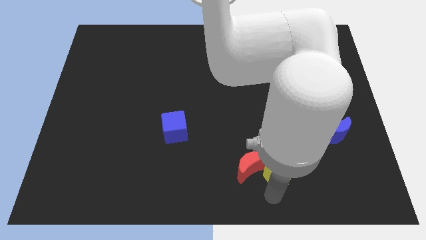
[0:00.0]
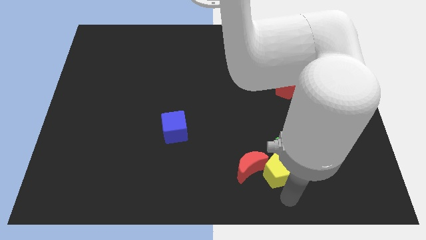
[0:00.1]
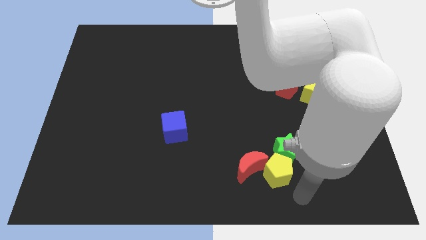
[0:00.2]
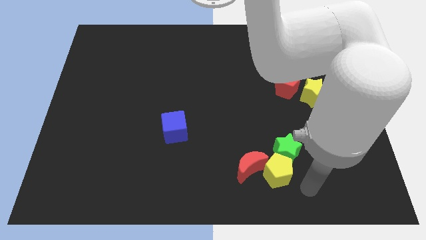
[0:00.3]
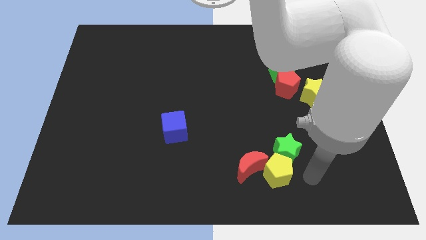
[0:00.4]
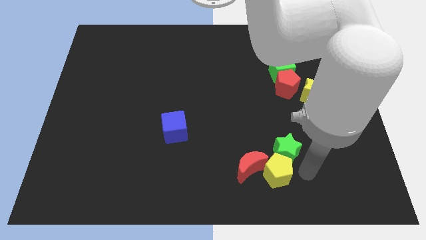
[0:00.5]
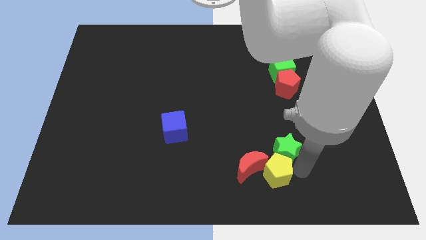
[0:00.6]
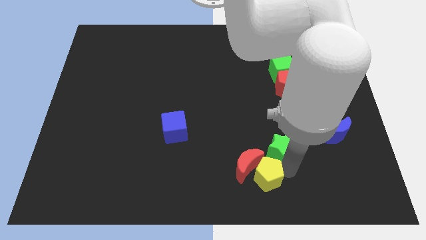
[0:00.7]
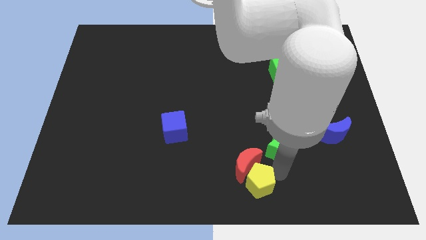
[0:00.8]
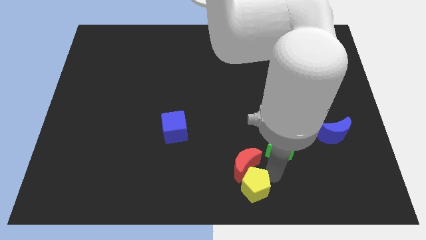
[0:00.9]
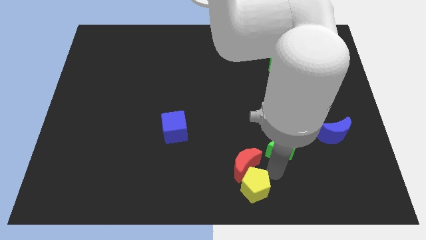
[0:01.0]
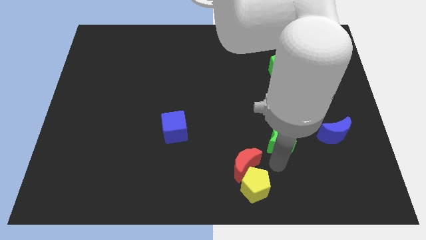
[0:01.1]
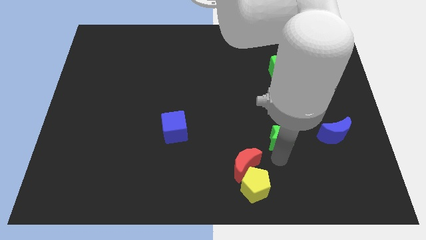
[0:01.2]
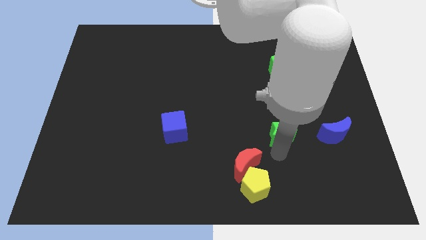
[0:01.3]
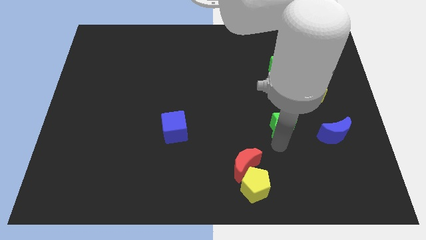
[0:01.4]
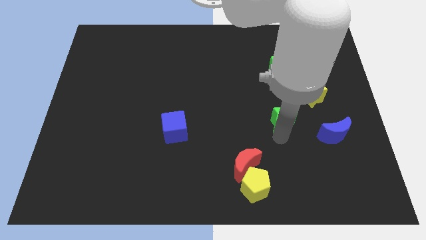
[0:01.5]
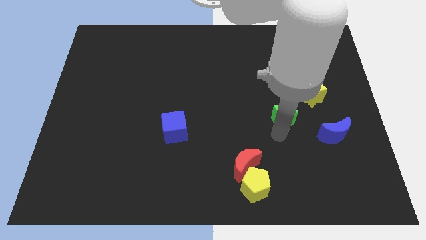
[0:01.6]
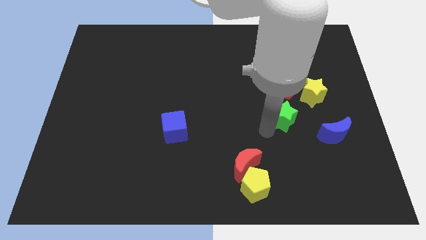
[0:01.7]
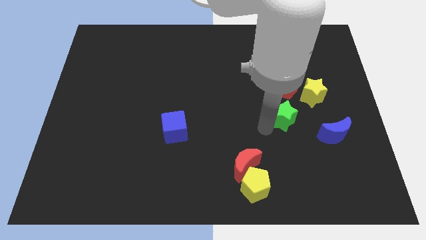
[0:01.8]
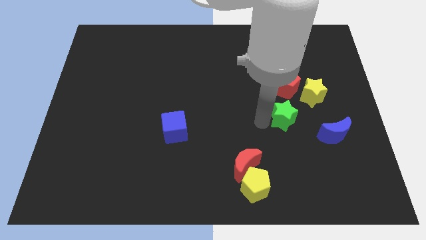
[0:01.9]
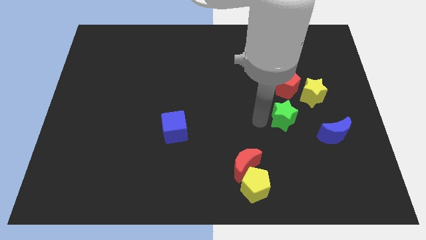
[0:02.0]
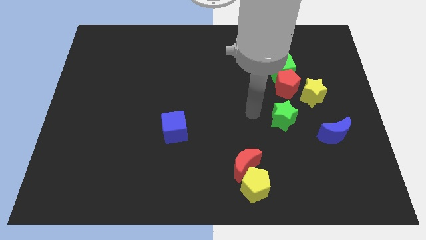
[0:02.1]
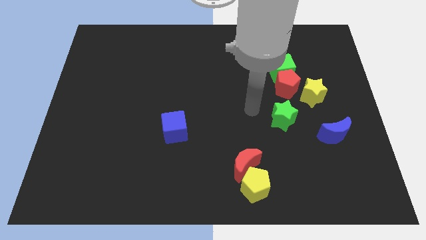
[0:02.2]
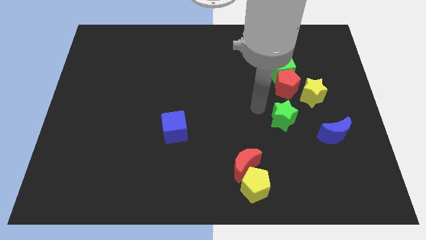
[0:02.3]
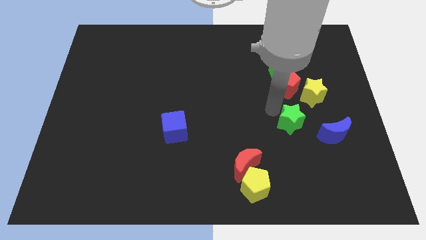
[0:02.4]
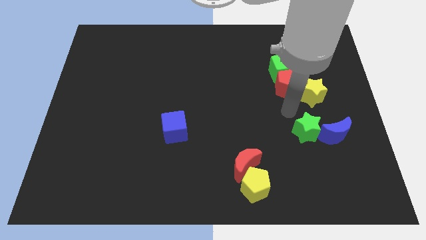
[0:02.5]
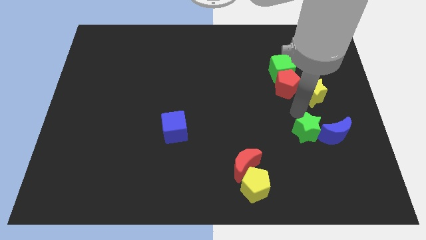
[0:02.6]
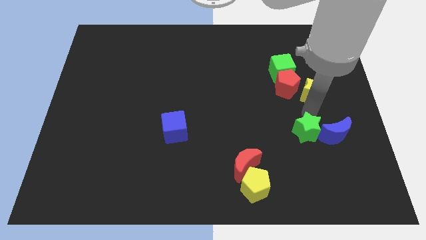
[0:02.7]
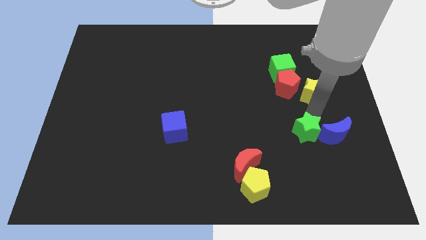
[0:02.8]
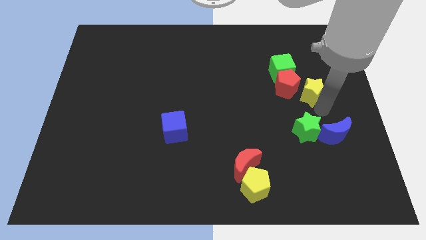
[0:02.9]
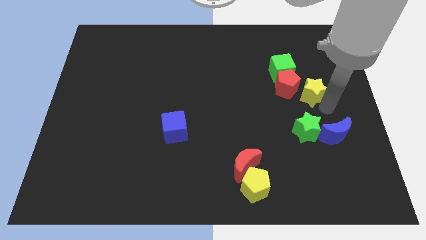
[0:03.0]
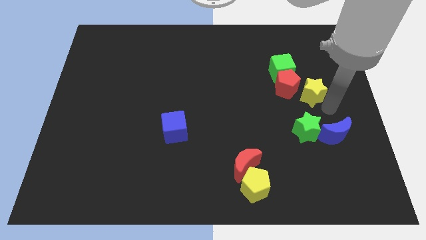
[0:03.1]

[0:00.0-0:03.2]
push the green star into the blue moon

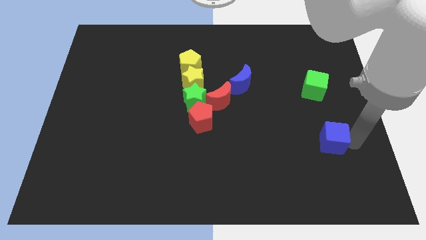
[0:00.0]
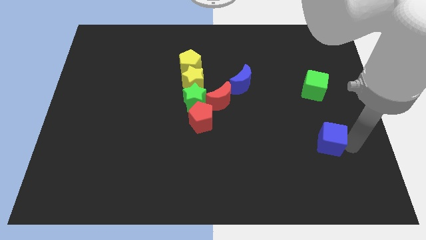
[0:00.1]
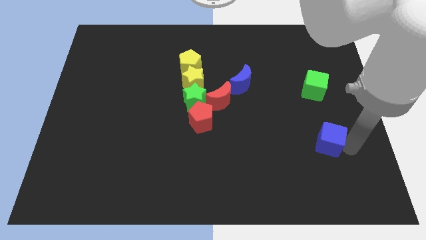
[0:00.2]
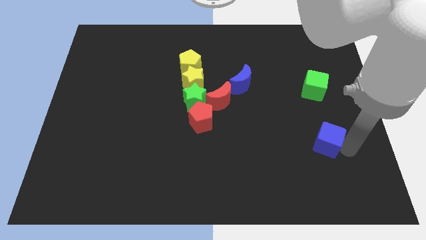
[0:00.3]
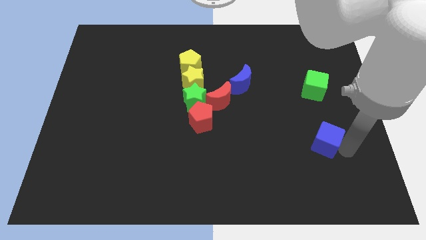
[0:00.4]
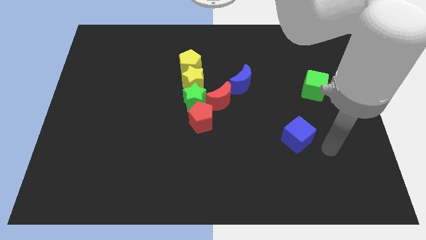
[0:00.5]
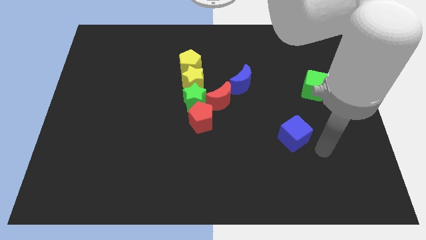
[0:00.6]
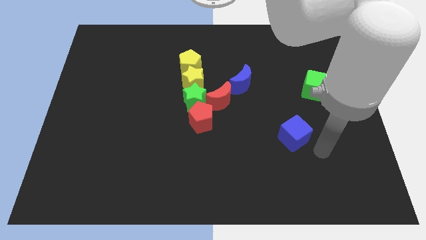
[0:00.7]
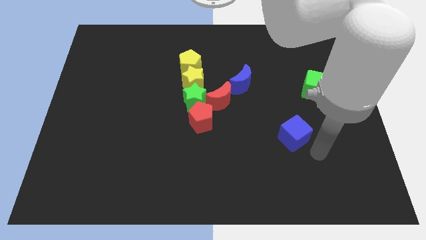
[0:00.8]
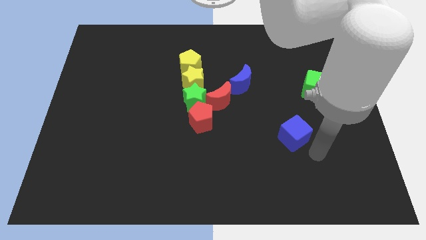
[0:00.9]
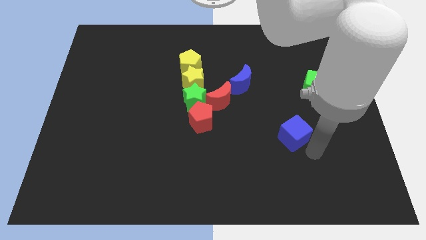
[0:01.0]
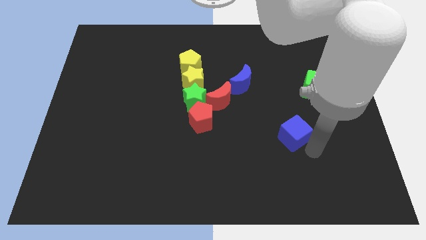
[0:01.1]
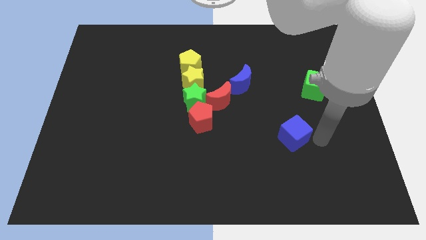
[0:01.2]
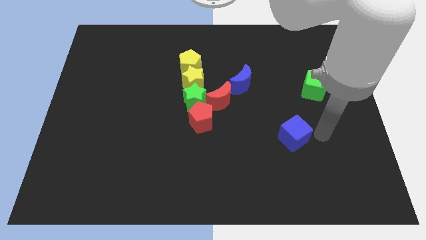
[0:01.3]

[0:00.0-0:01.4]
push the blue cube towards the center

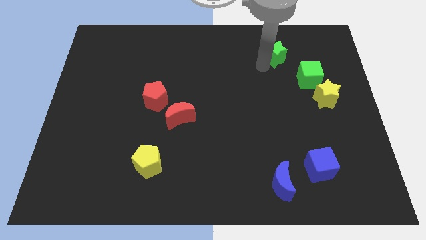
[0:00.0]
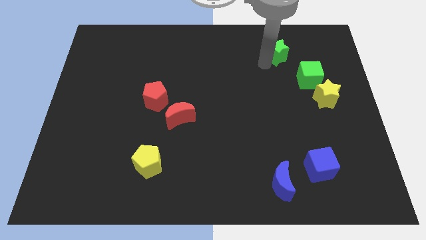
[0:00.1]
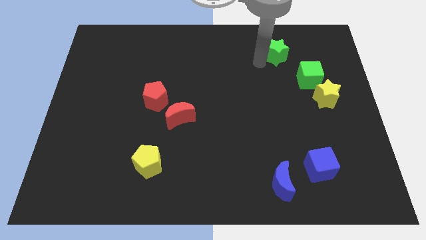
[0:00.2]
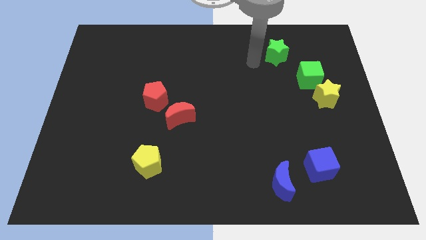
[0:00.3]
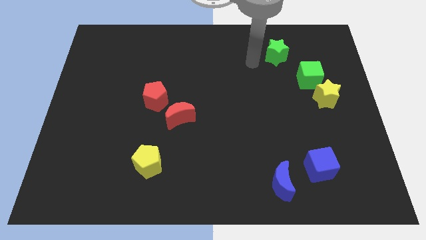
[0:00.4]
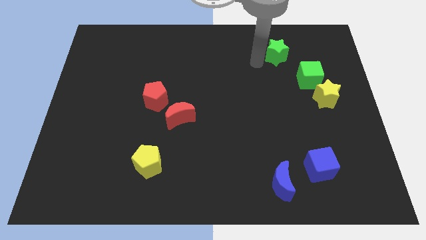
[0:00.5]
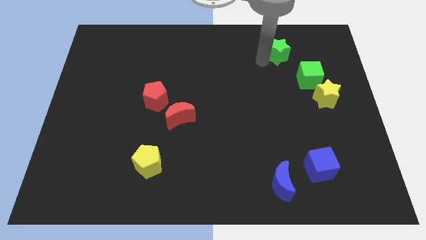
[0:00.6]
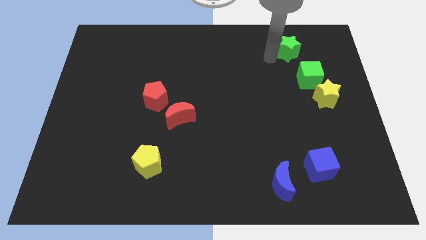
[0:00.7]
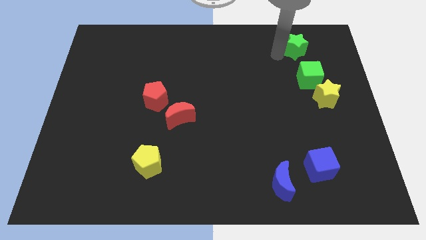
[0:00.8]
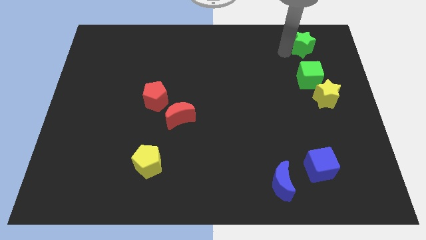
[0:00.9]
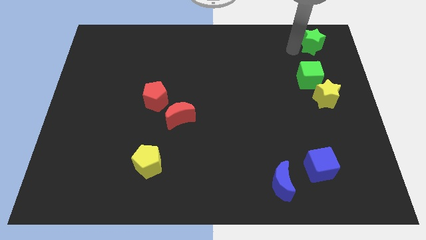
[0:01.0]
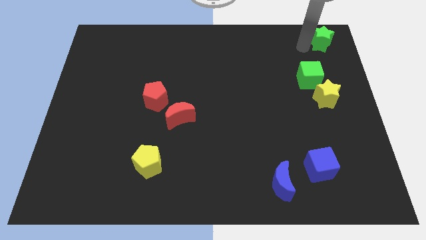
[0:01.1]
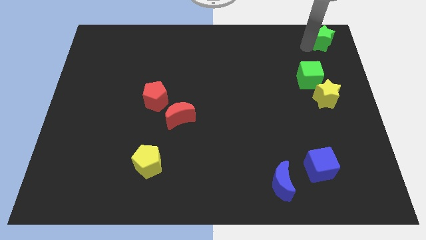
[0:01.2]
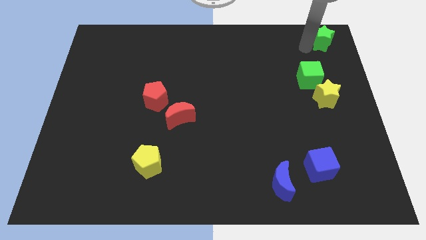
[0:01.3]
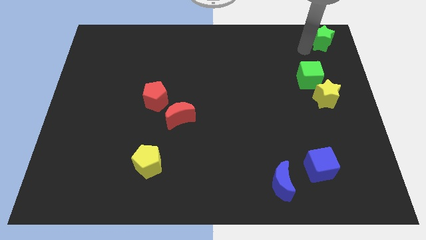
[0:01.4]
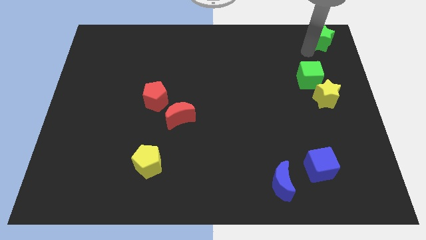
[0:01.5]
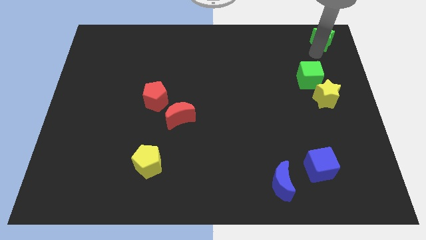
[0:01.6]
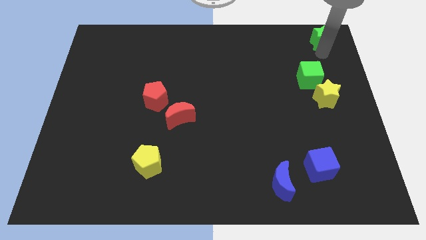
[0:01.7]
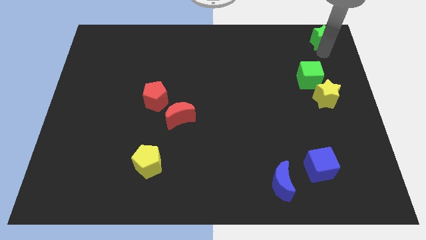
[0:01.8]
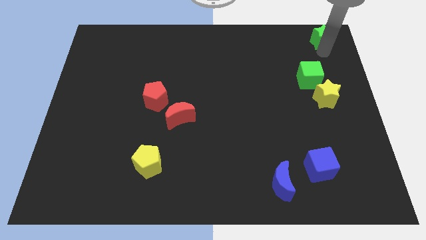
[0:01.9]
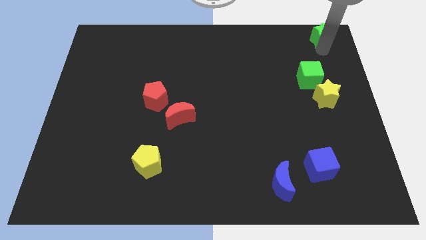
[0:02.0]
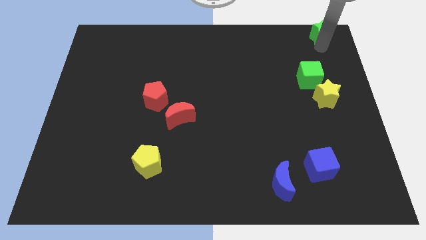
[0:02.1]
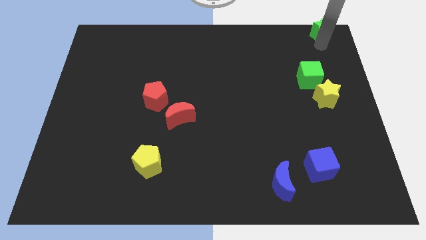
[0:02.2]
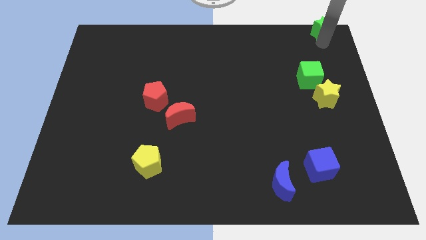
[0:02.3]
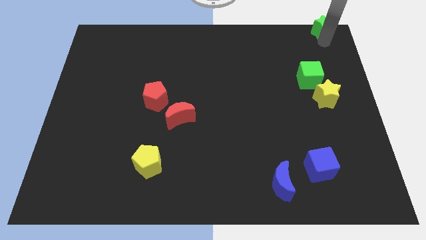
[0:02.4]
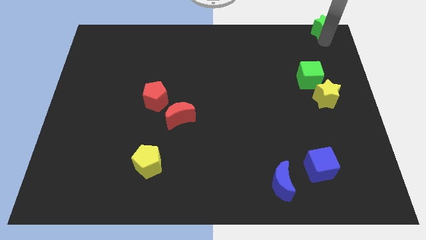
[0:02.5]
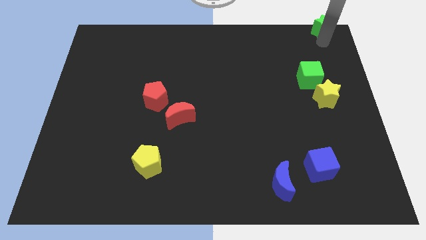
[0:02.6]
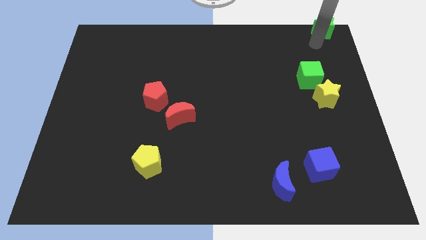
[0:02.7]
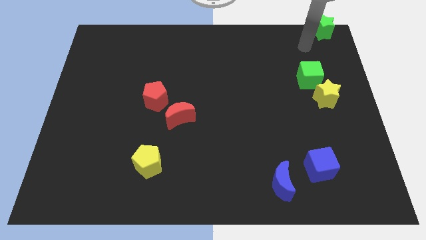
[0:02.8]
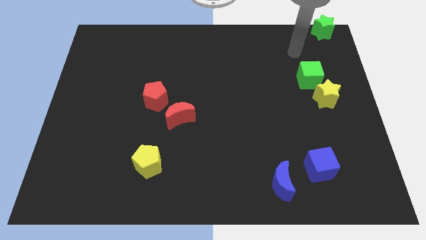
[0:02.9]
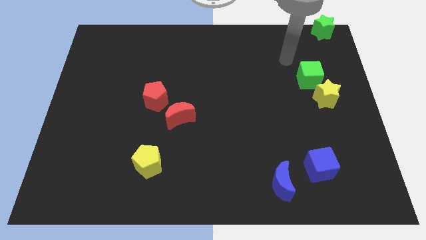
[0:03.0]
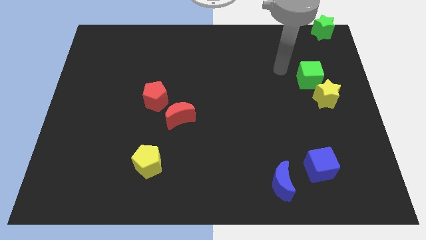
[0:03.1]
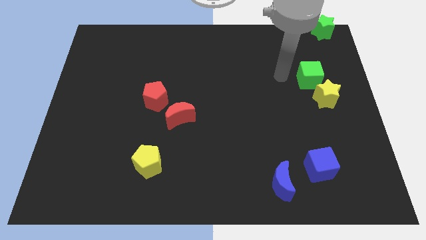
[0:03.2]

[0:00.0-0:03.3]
push the green star to the top right

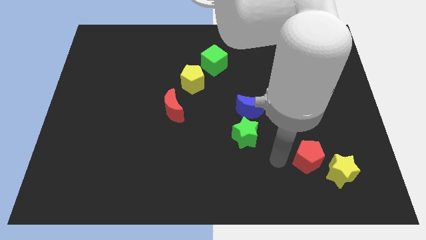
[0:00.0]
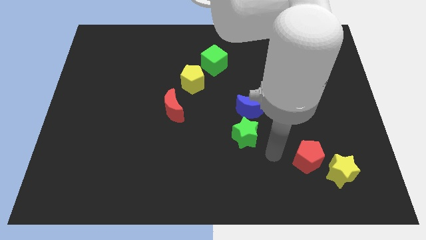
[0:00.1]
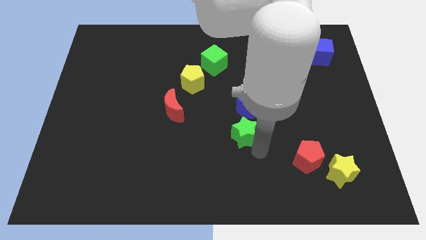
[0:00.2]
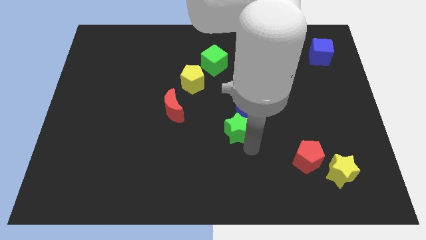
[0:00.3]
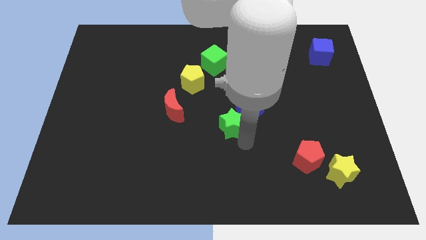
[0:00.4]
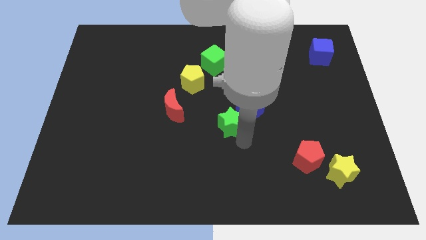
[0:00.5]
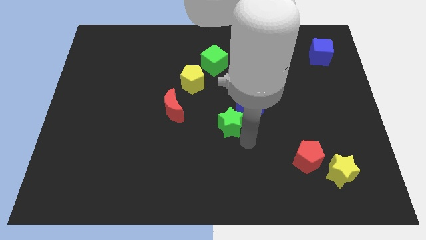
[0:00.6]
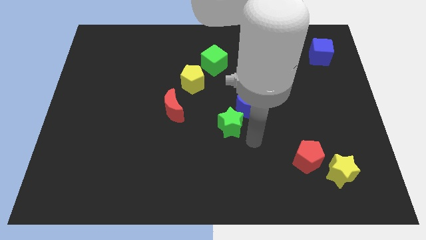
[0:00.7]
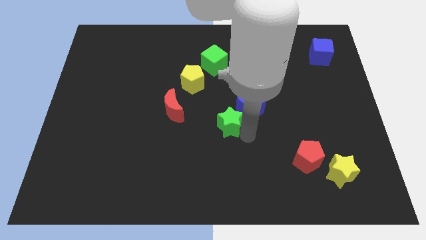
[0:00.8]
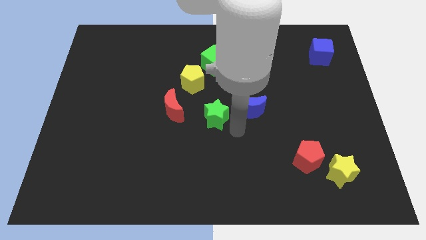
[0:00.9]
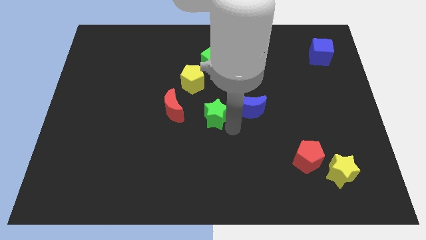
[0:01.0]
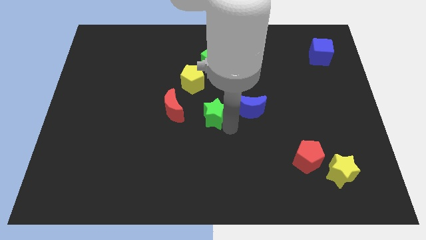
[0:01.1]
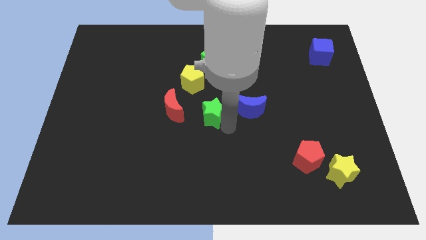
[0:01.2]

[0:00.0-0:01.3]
push green star in between red crescent and blue crescent
